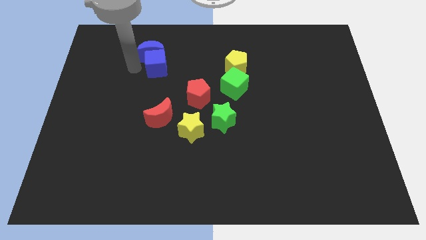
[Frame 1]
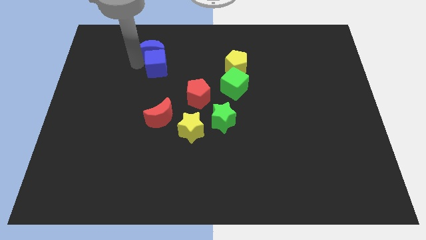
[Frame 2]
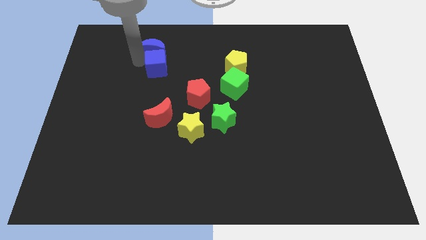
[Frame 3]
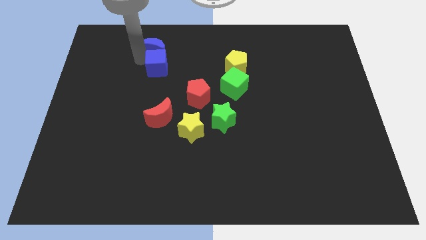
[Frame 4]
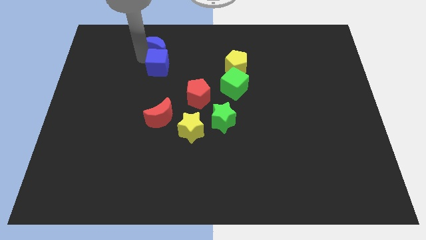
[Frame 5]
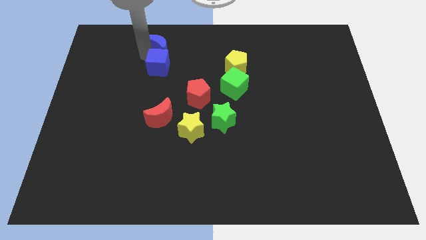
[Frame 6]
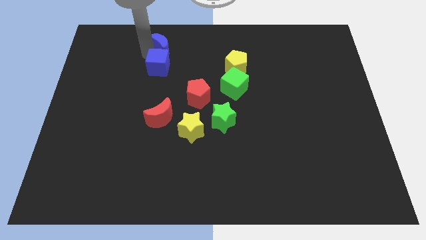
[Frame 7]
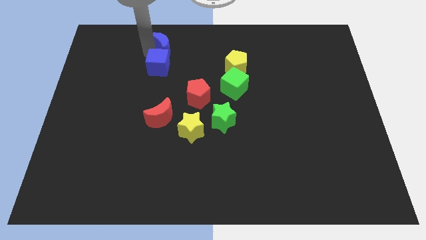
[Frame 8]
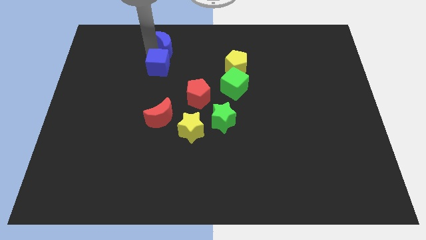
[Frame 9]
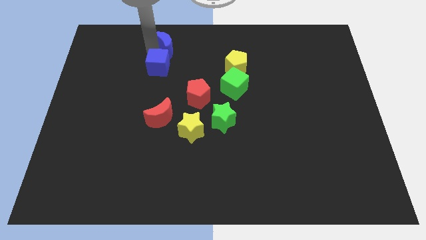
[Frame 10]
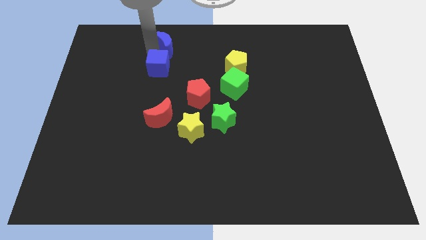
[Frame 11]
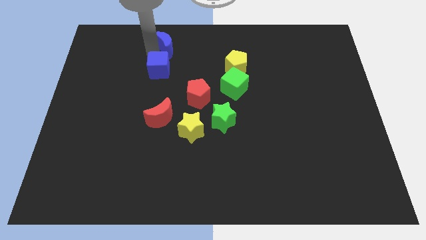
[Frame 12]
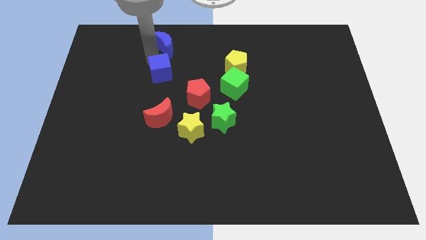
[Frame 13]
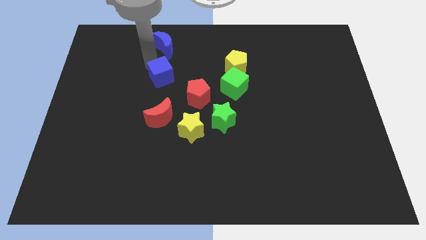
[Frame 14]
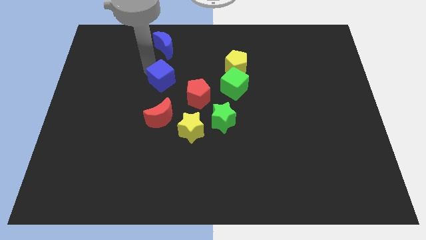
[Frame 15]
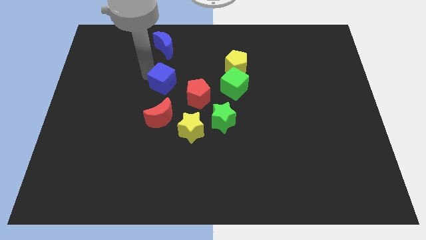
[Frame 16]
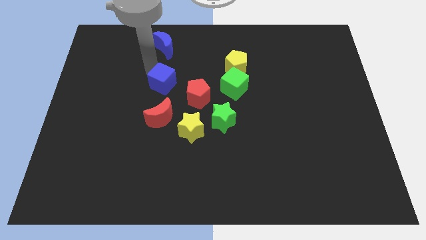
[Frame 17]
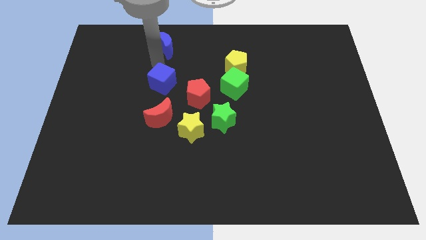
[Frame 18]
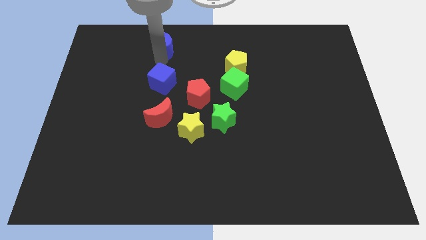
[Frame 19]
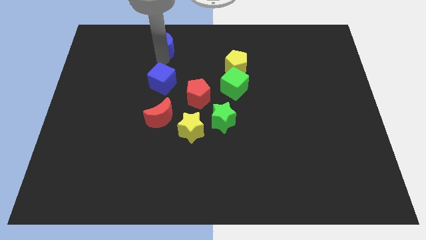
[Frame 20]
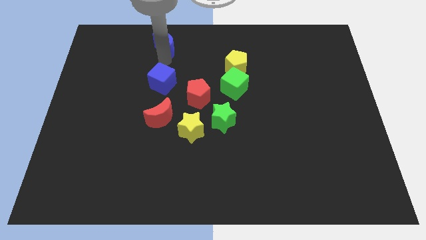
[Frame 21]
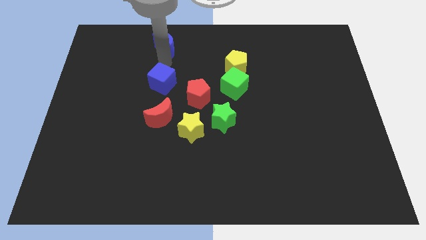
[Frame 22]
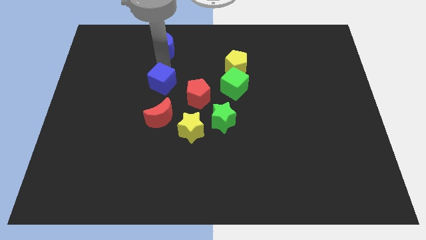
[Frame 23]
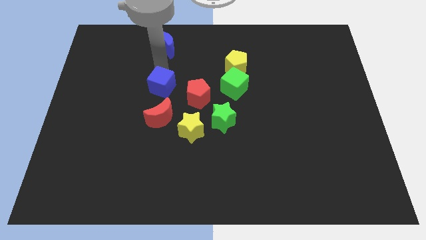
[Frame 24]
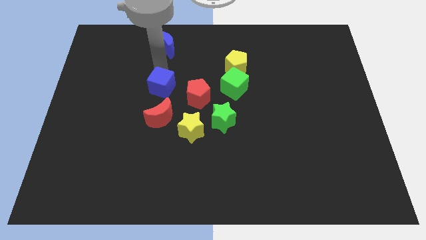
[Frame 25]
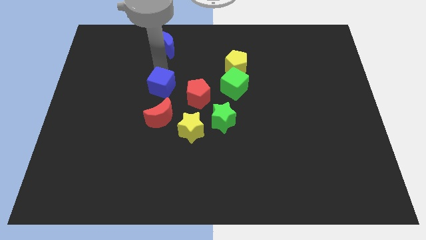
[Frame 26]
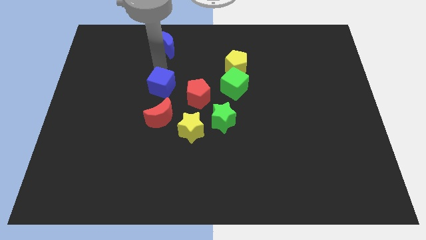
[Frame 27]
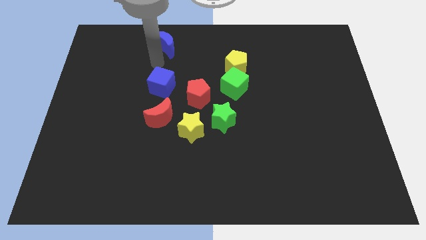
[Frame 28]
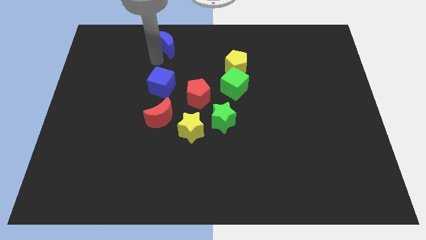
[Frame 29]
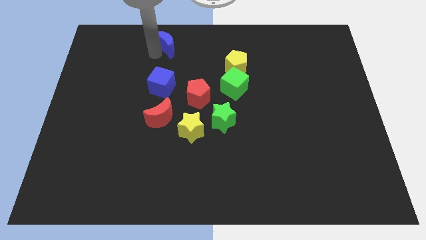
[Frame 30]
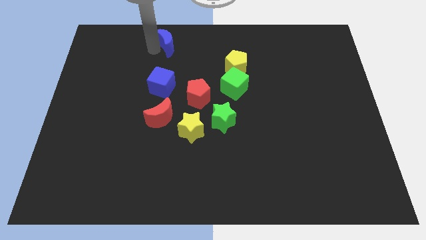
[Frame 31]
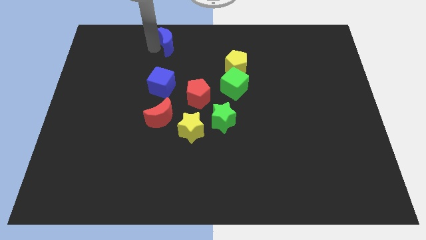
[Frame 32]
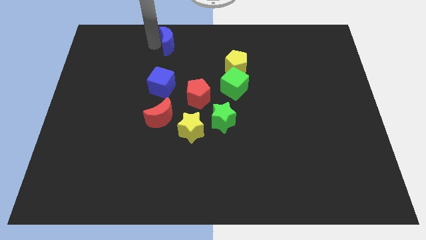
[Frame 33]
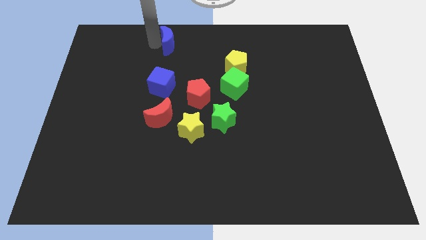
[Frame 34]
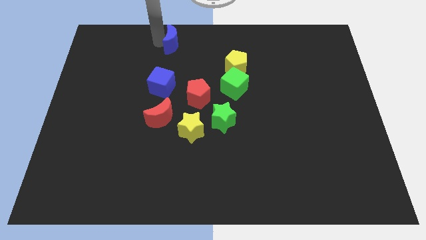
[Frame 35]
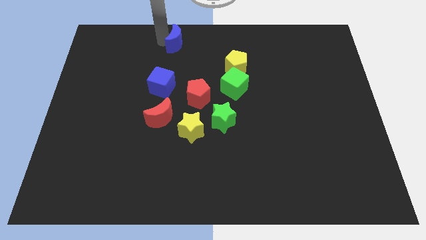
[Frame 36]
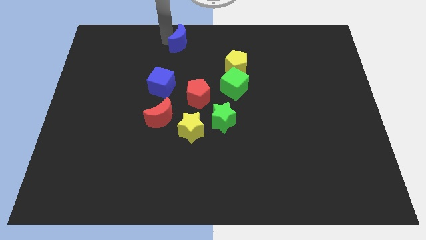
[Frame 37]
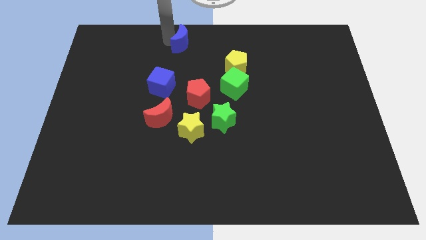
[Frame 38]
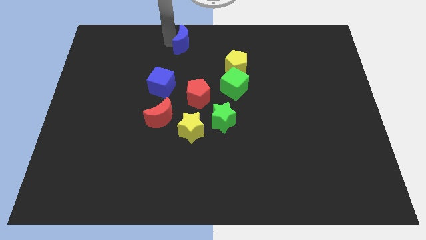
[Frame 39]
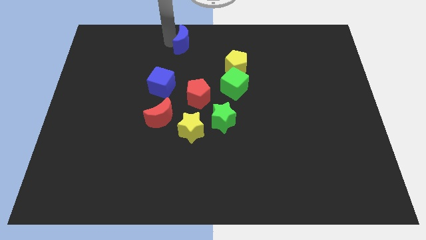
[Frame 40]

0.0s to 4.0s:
put the blue crescent diagonally on the top right side of the blue cube

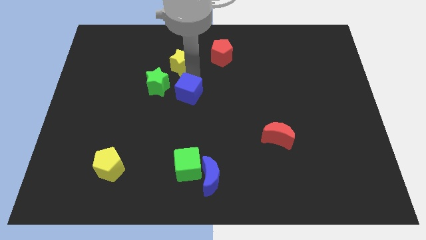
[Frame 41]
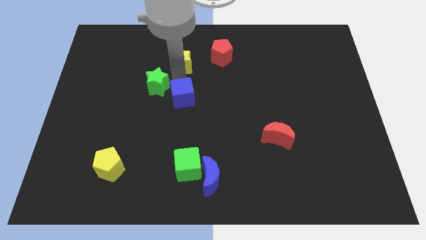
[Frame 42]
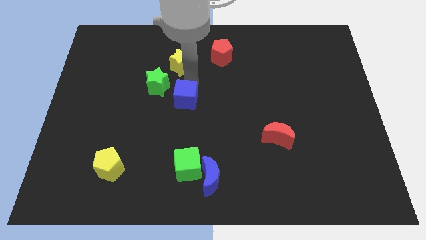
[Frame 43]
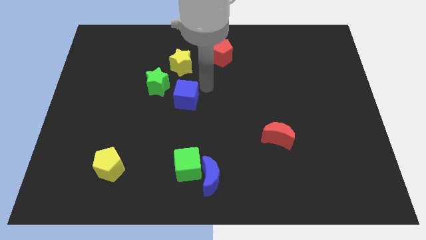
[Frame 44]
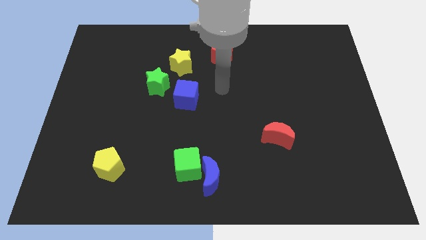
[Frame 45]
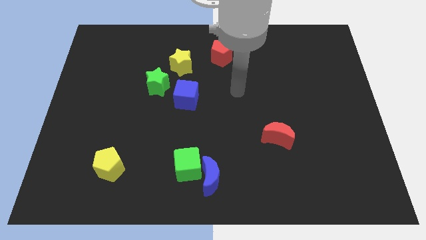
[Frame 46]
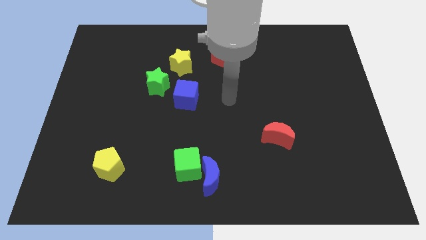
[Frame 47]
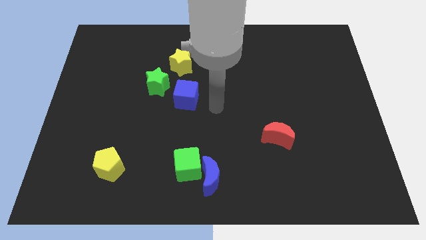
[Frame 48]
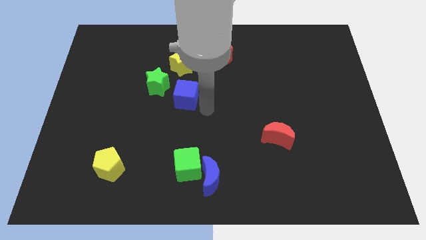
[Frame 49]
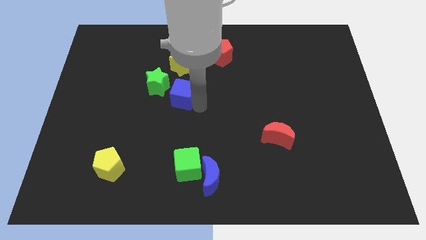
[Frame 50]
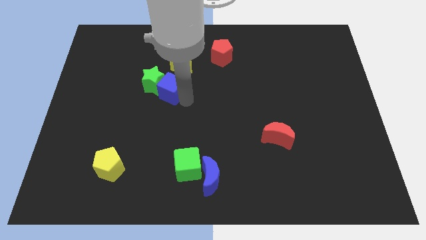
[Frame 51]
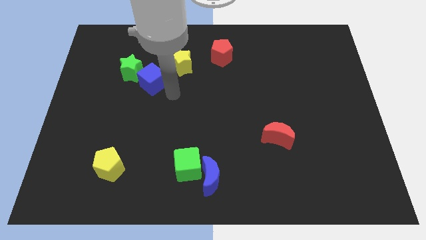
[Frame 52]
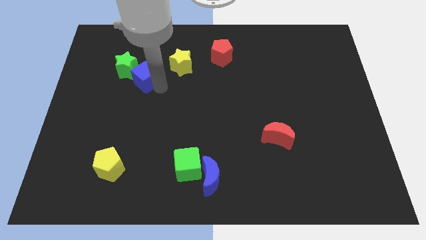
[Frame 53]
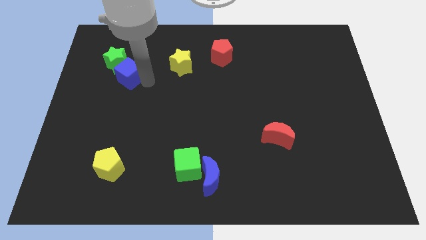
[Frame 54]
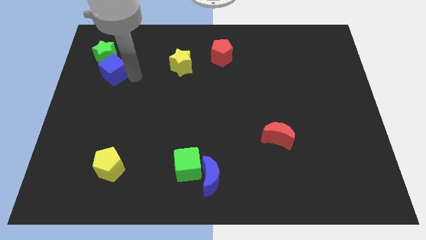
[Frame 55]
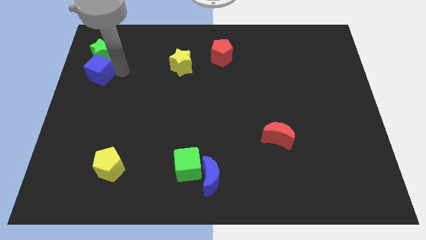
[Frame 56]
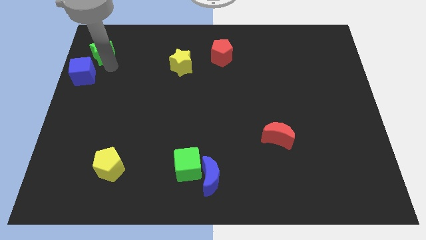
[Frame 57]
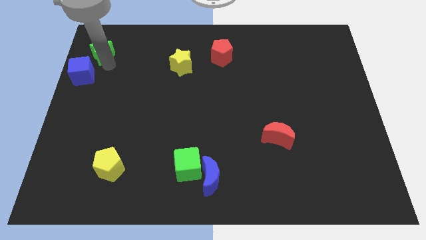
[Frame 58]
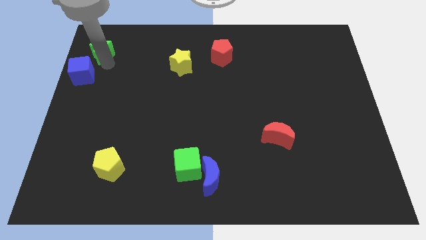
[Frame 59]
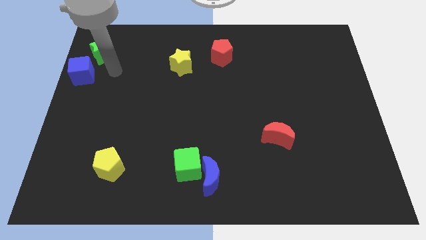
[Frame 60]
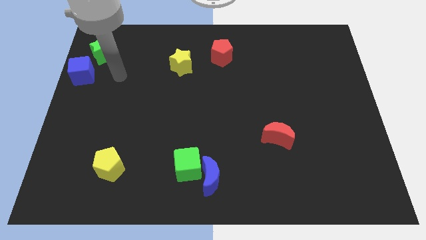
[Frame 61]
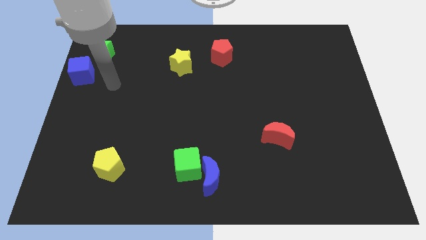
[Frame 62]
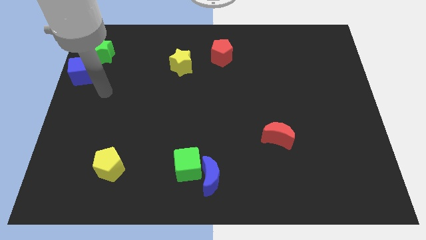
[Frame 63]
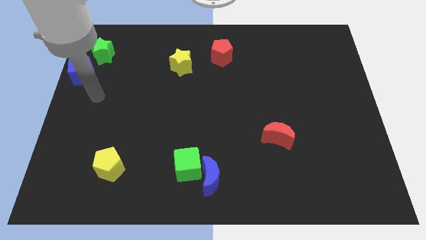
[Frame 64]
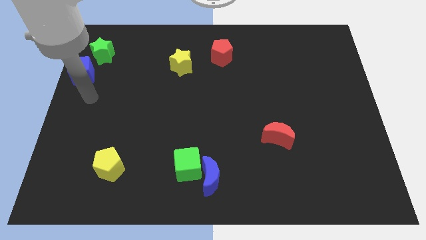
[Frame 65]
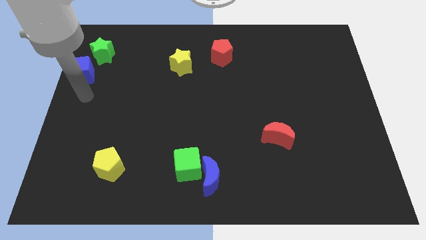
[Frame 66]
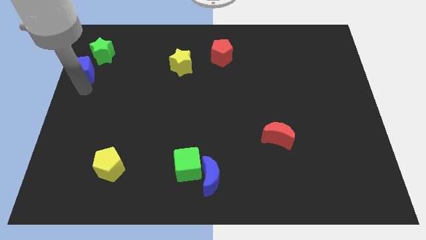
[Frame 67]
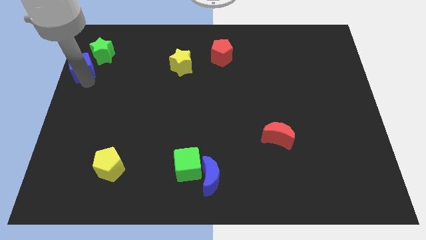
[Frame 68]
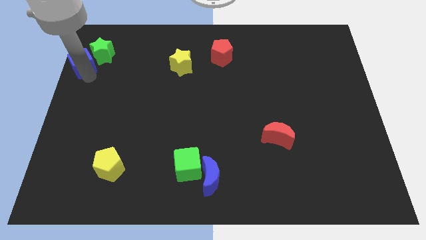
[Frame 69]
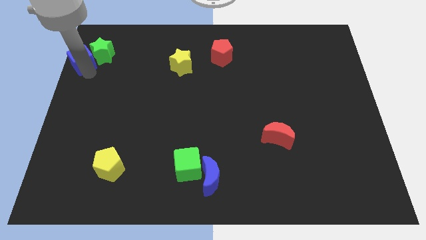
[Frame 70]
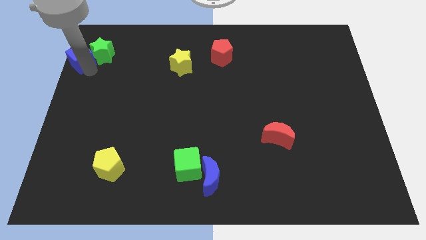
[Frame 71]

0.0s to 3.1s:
slide the blue cube and green star to the towards left

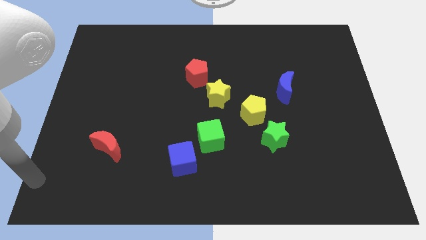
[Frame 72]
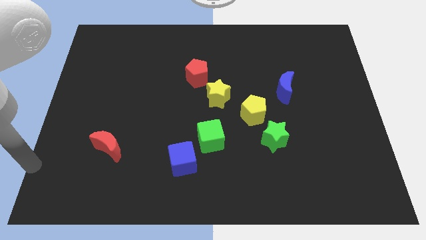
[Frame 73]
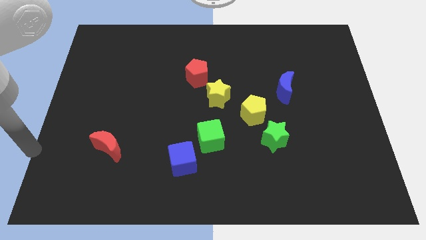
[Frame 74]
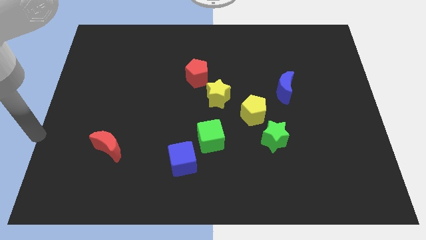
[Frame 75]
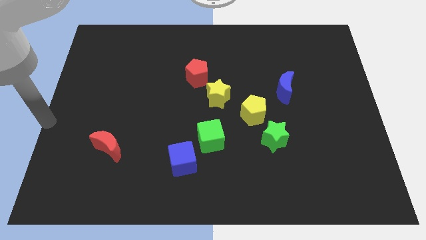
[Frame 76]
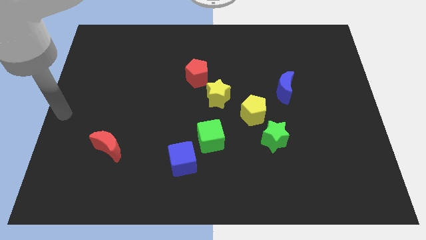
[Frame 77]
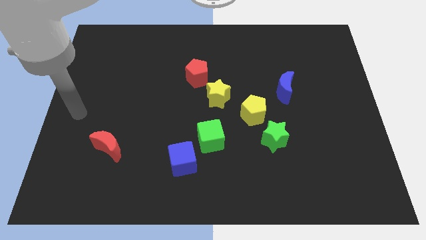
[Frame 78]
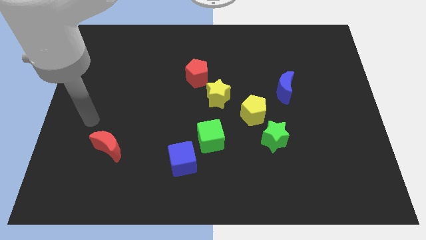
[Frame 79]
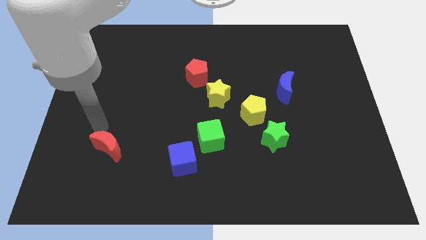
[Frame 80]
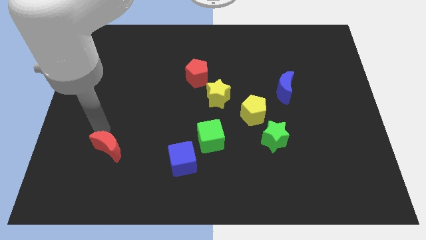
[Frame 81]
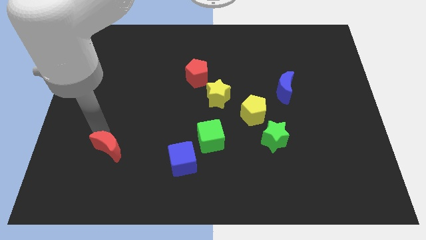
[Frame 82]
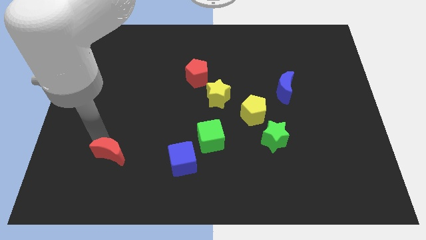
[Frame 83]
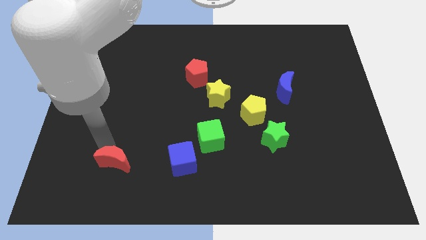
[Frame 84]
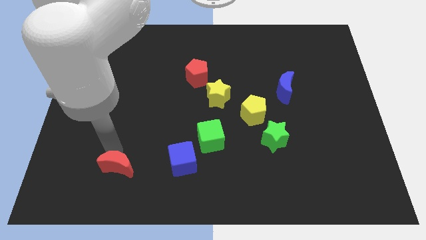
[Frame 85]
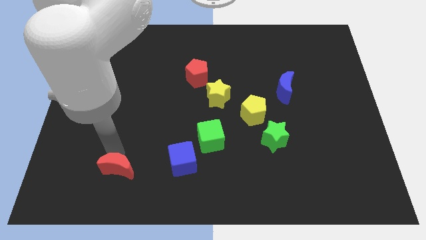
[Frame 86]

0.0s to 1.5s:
move the red crescent to the left of the blue cube

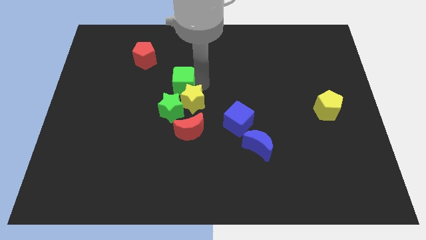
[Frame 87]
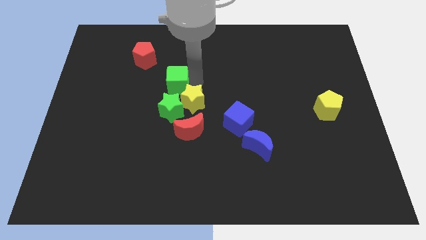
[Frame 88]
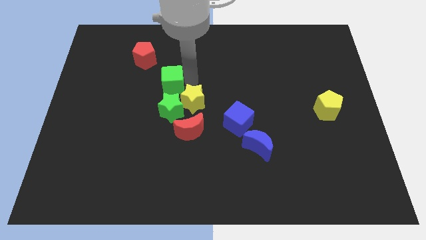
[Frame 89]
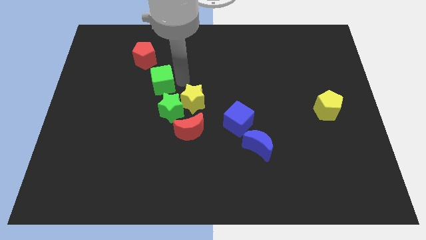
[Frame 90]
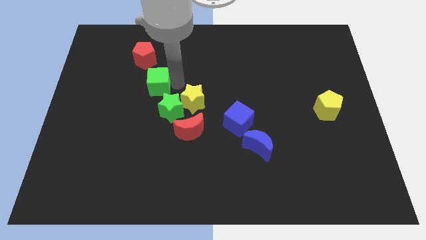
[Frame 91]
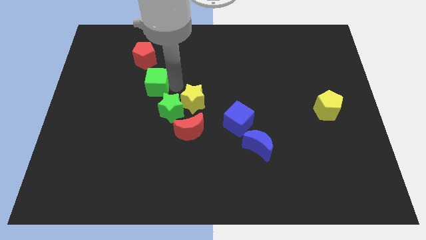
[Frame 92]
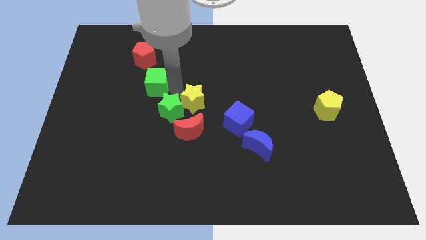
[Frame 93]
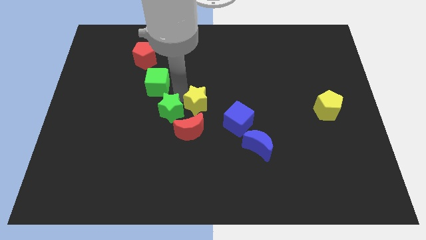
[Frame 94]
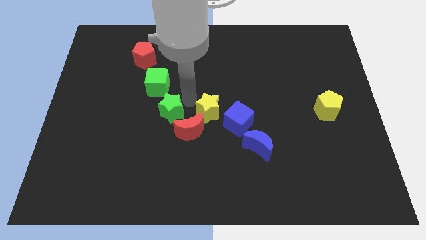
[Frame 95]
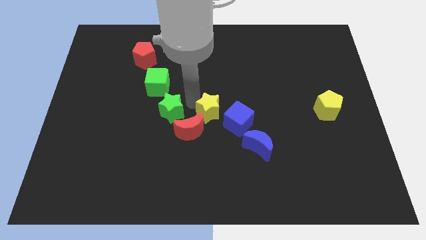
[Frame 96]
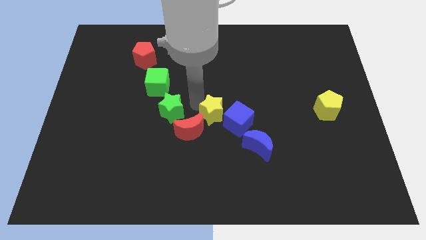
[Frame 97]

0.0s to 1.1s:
move the green cube to the top of the green star
